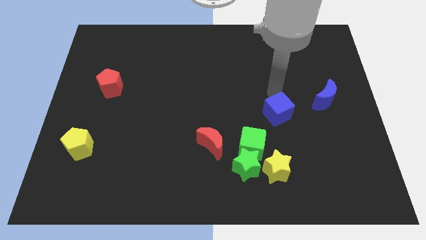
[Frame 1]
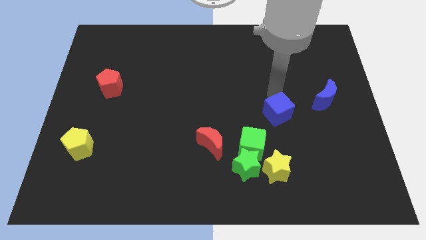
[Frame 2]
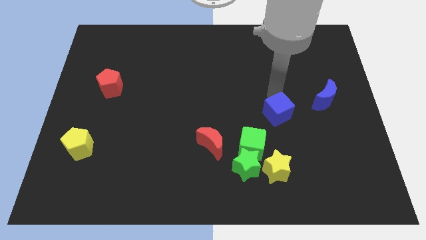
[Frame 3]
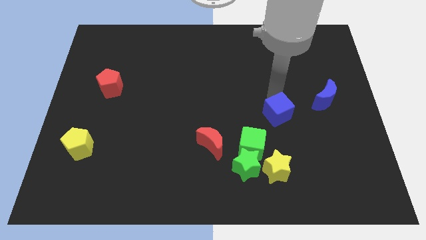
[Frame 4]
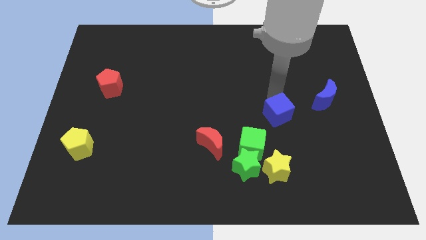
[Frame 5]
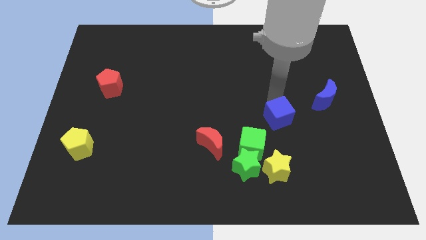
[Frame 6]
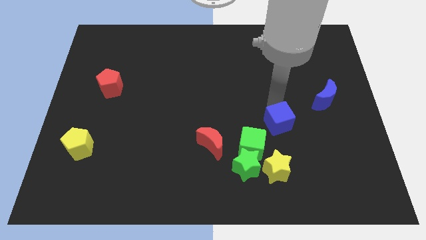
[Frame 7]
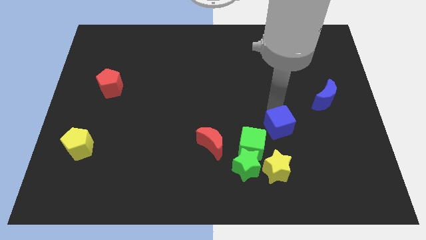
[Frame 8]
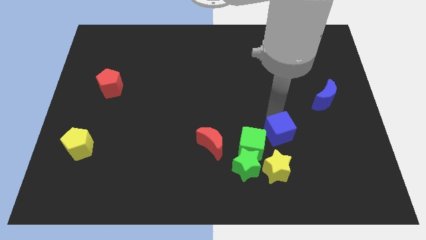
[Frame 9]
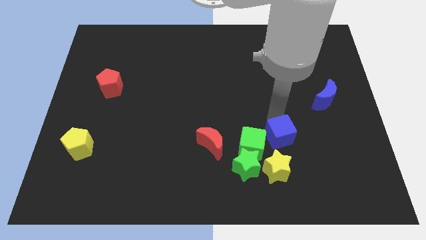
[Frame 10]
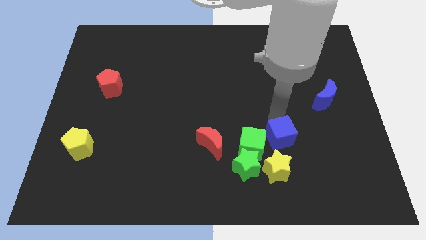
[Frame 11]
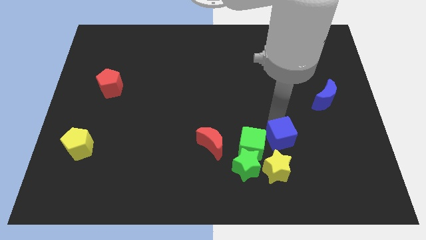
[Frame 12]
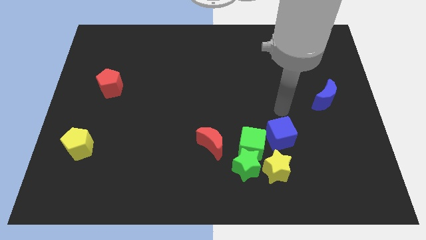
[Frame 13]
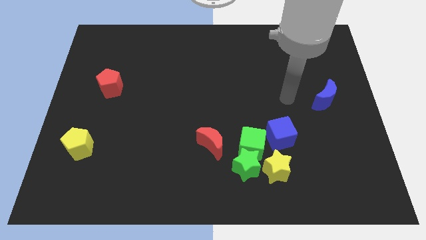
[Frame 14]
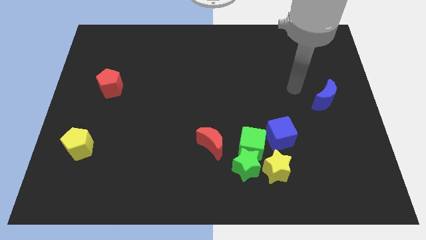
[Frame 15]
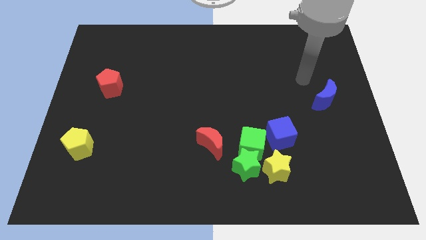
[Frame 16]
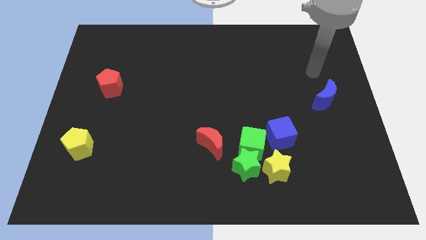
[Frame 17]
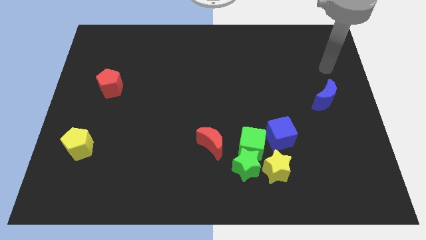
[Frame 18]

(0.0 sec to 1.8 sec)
place the blue cube right to the green square

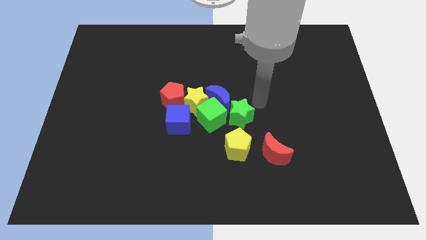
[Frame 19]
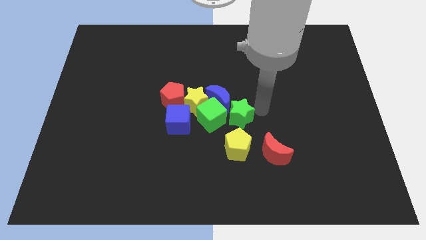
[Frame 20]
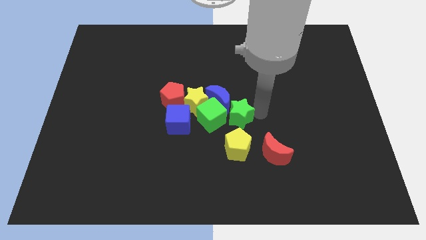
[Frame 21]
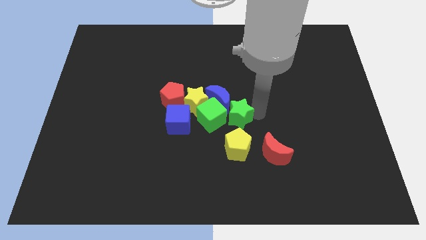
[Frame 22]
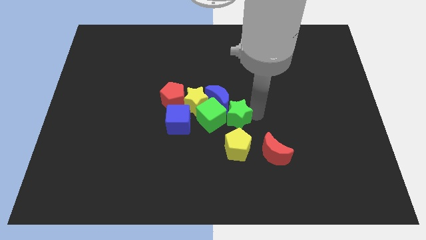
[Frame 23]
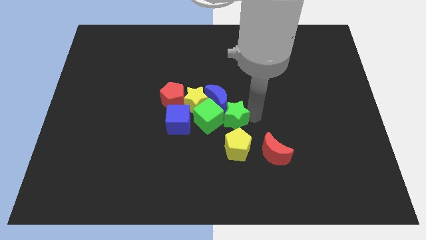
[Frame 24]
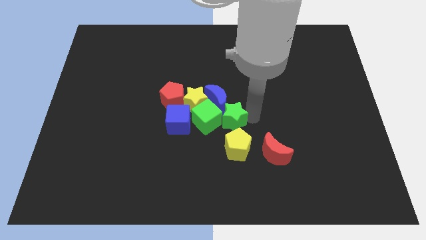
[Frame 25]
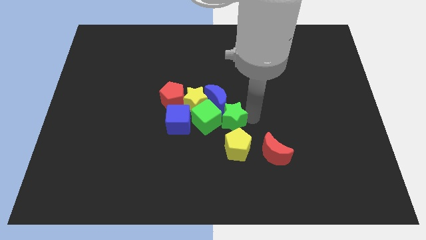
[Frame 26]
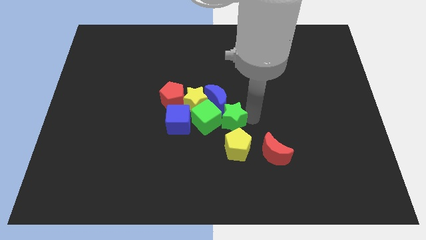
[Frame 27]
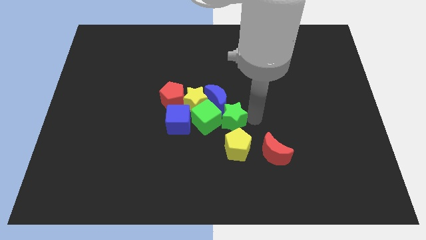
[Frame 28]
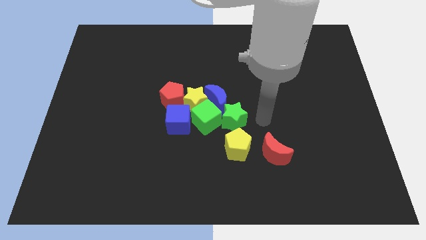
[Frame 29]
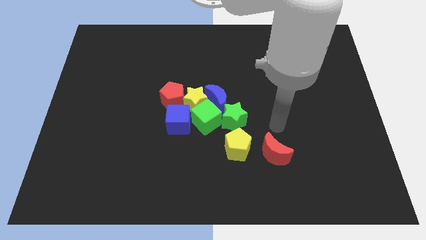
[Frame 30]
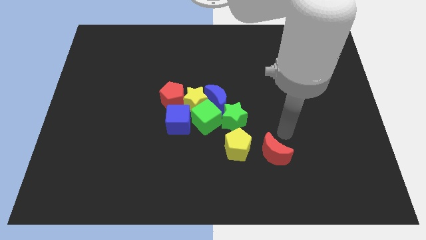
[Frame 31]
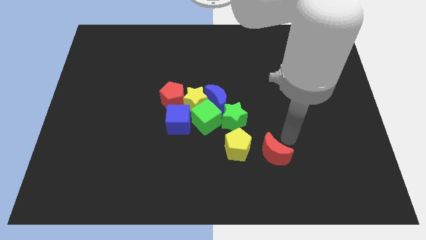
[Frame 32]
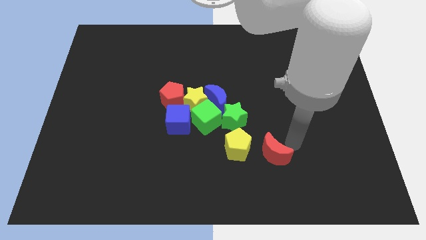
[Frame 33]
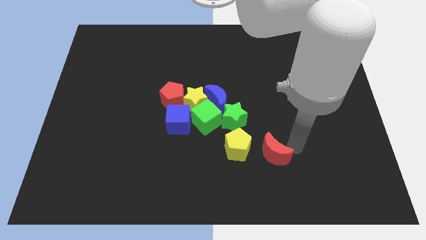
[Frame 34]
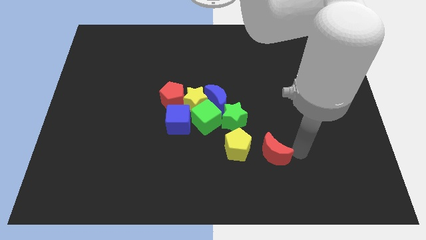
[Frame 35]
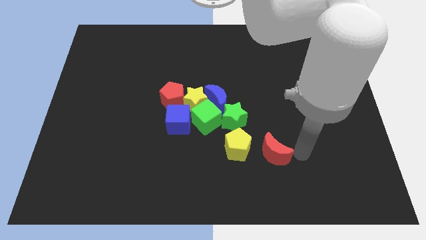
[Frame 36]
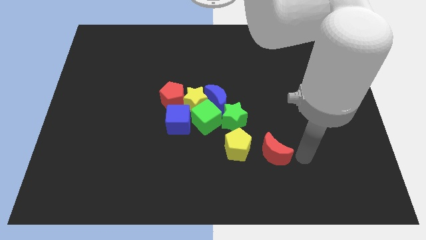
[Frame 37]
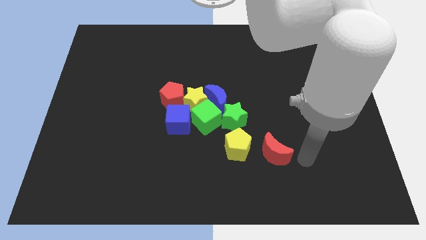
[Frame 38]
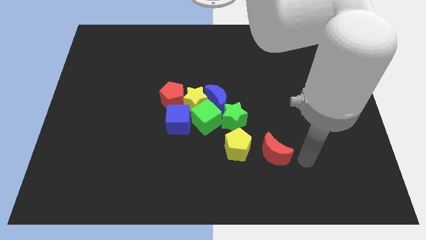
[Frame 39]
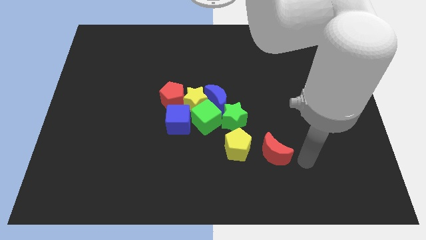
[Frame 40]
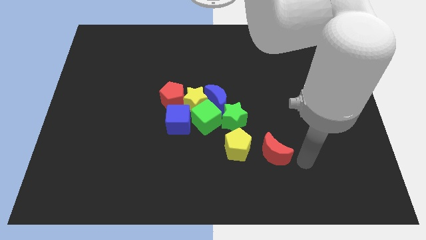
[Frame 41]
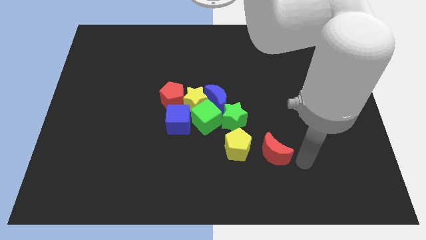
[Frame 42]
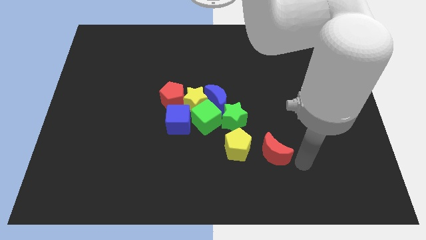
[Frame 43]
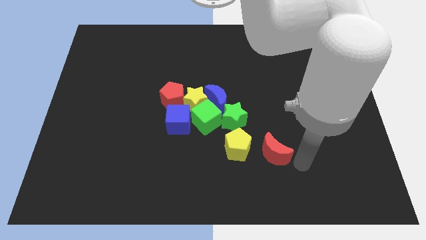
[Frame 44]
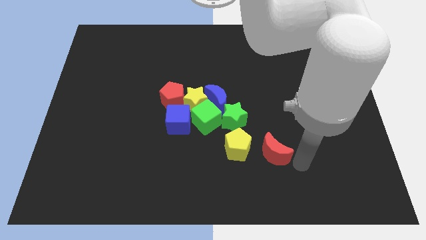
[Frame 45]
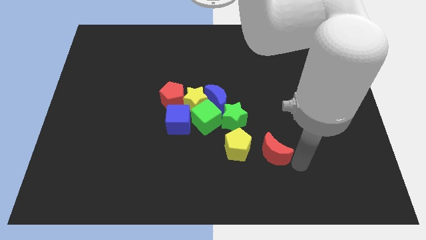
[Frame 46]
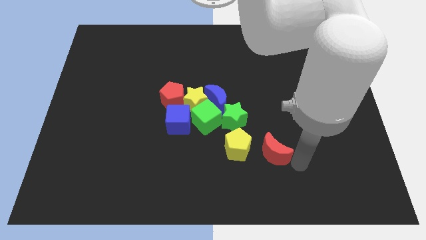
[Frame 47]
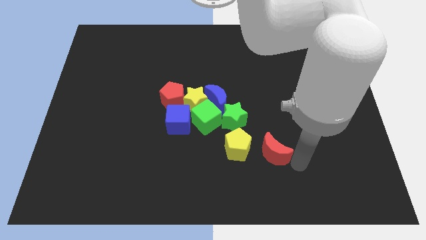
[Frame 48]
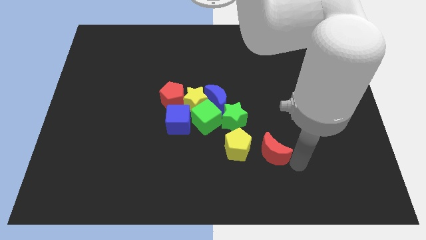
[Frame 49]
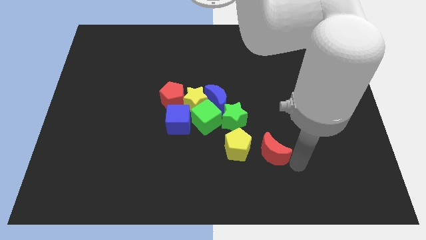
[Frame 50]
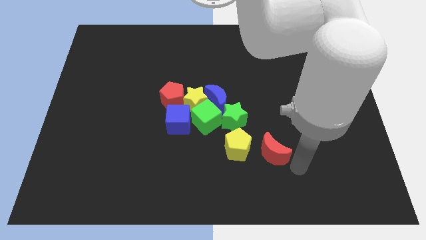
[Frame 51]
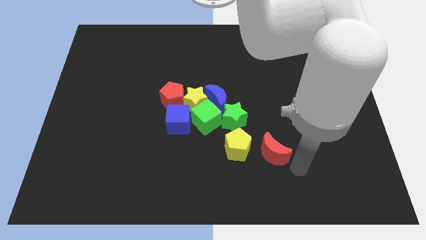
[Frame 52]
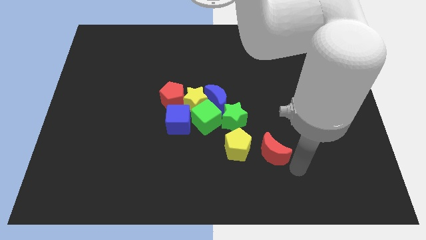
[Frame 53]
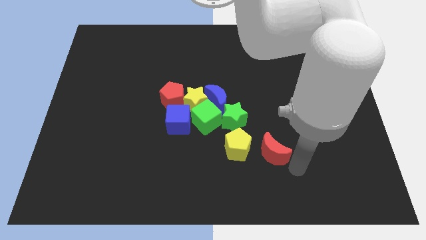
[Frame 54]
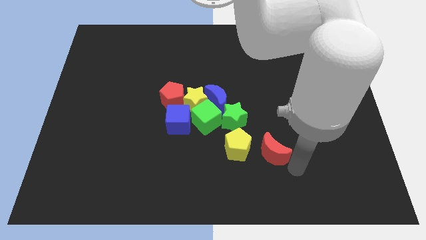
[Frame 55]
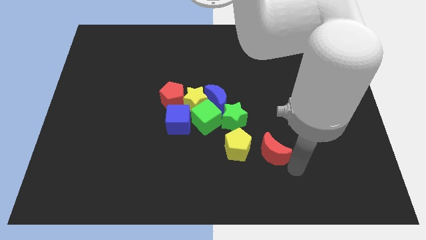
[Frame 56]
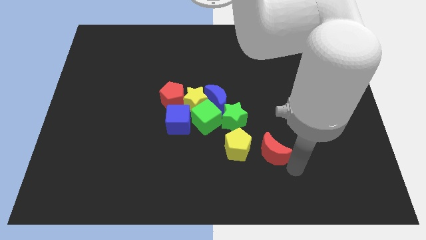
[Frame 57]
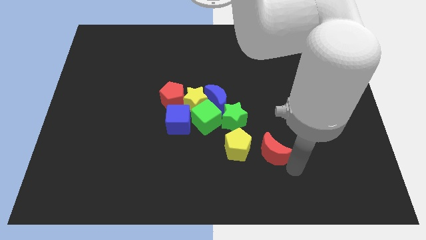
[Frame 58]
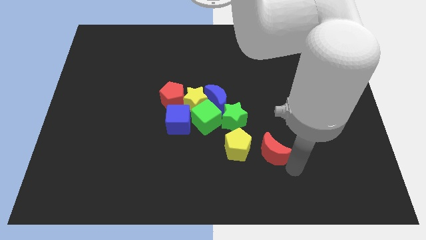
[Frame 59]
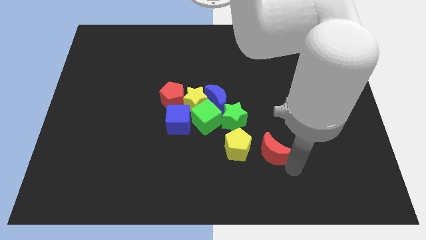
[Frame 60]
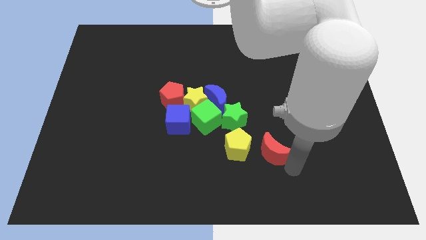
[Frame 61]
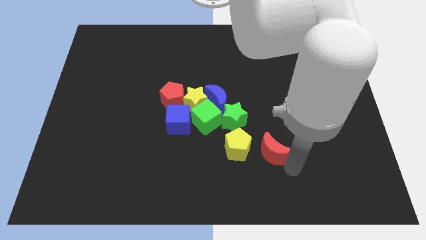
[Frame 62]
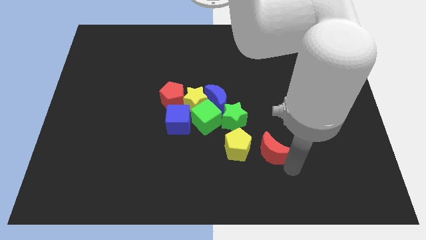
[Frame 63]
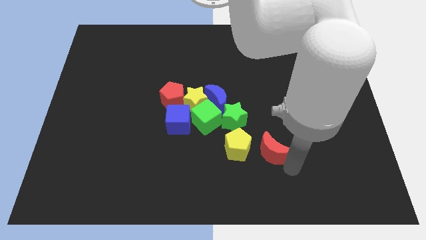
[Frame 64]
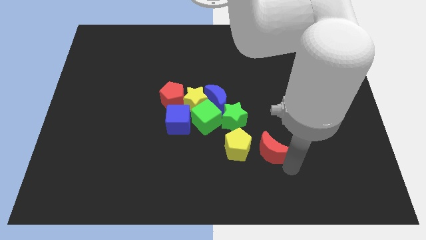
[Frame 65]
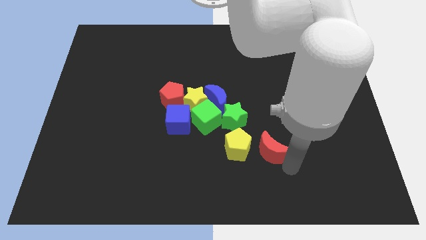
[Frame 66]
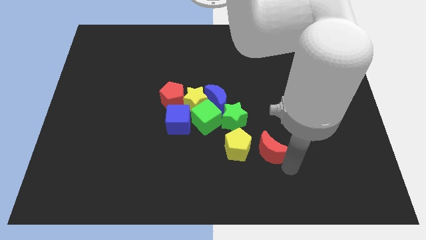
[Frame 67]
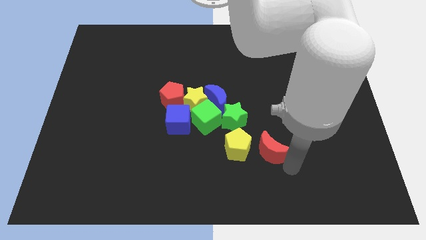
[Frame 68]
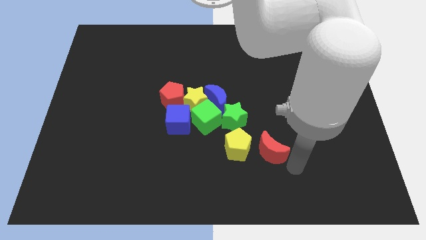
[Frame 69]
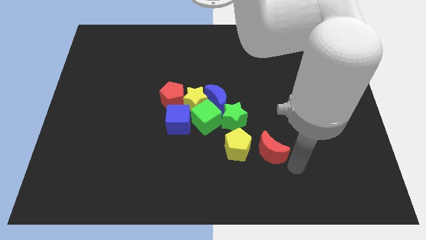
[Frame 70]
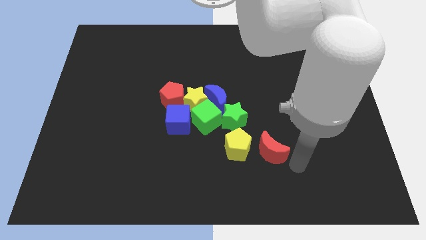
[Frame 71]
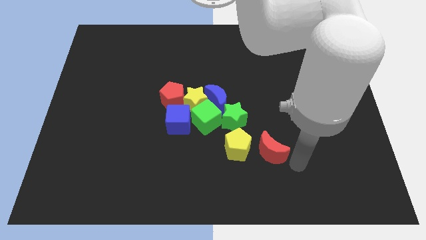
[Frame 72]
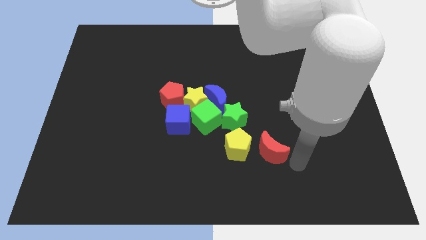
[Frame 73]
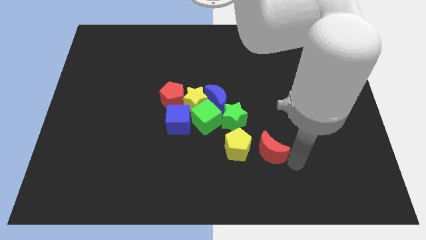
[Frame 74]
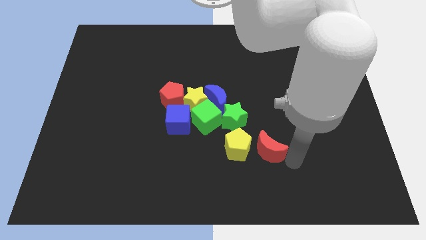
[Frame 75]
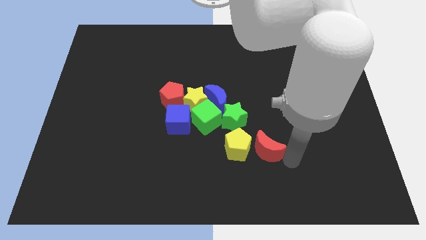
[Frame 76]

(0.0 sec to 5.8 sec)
move the red crescent to the to the green star

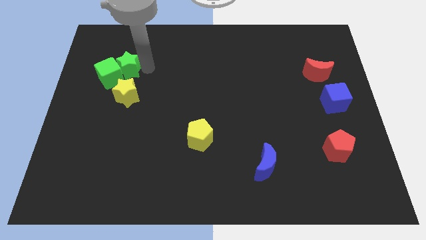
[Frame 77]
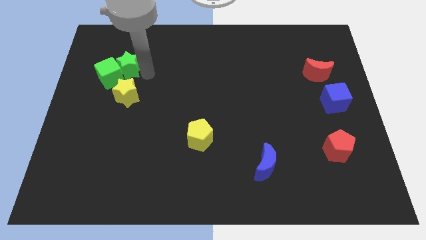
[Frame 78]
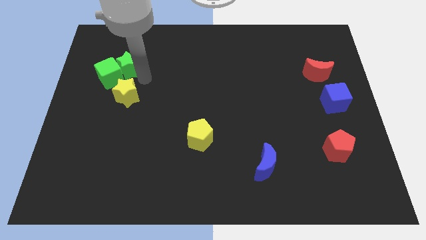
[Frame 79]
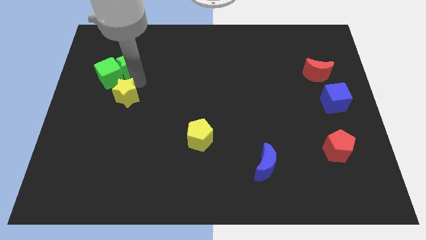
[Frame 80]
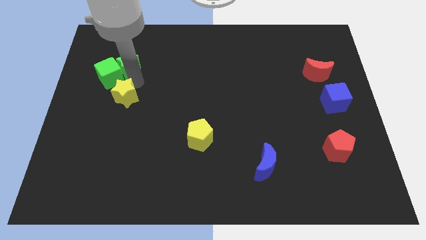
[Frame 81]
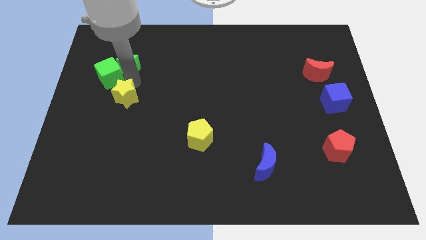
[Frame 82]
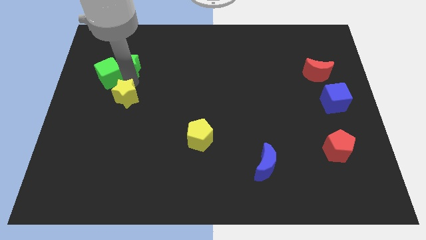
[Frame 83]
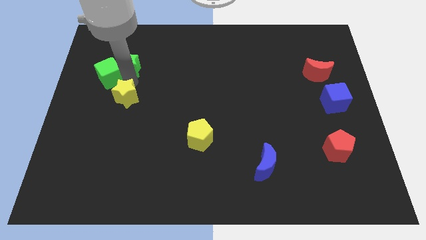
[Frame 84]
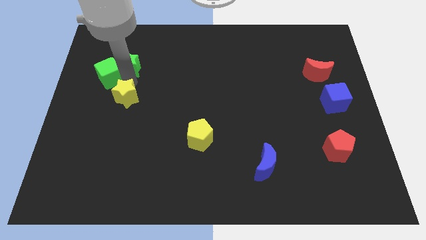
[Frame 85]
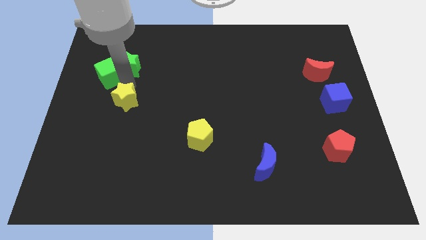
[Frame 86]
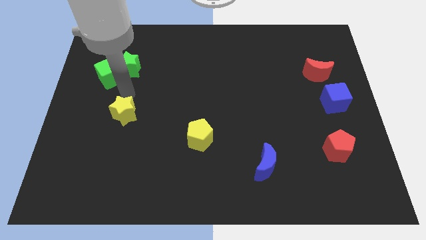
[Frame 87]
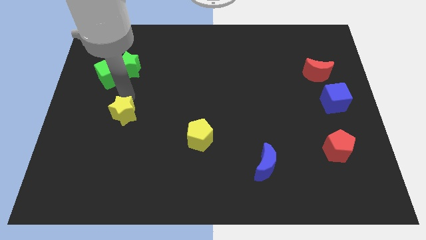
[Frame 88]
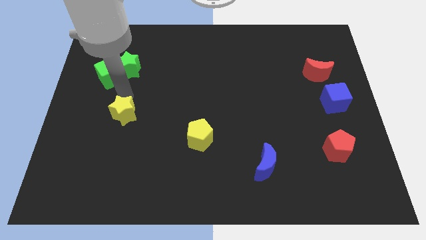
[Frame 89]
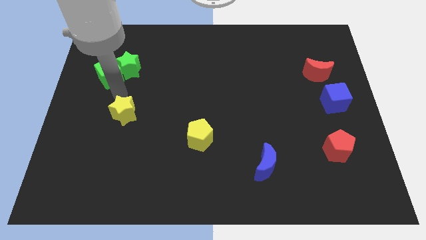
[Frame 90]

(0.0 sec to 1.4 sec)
move the yellow star towards the left center of the board
